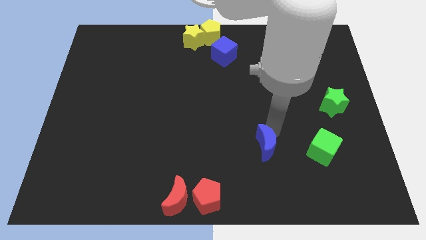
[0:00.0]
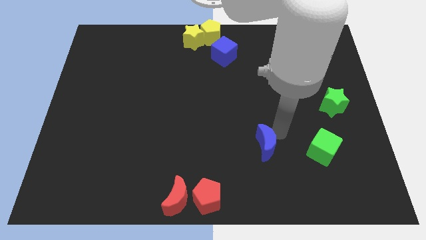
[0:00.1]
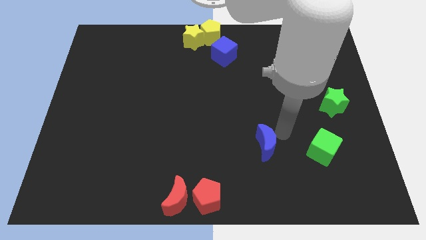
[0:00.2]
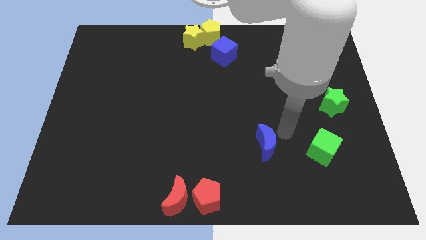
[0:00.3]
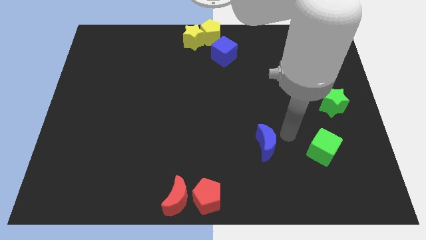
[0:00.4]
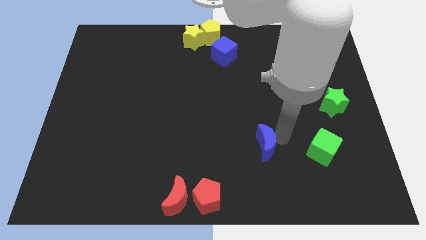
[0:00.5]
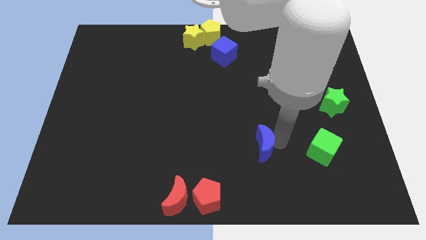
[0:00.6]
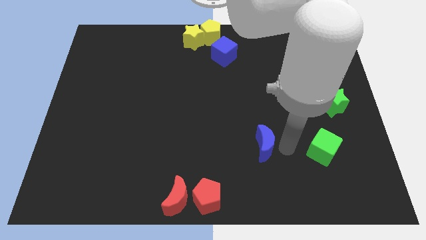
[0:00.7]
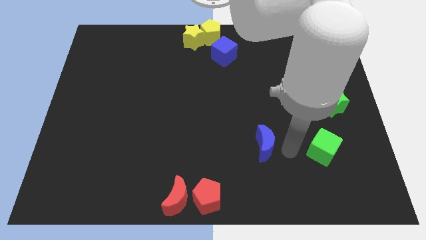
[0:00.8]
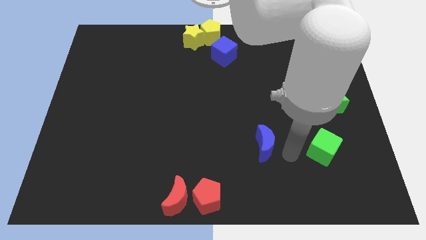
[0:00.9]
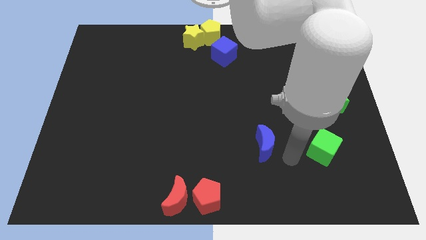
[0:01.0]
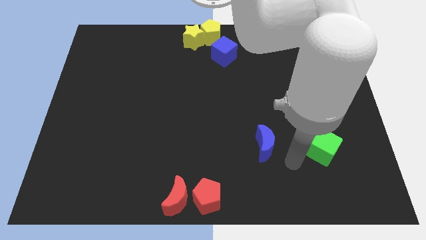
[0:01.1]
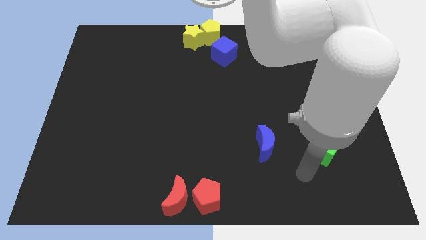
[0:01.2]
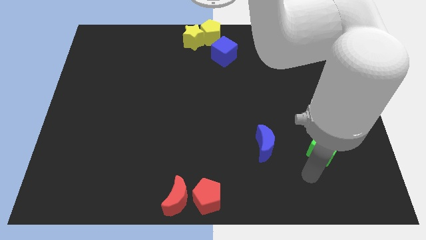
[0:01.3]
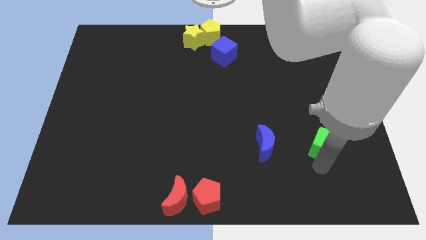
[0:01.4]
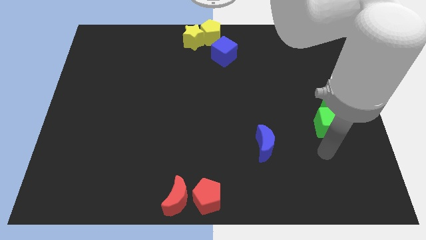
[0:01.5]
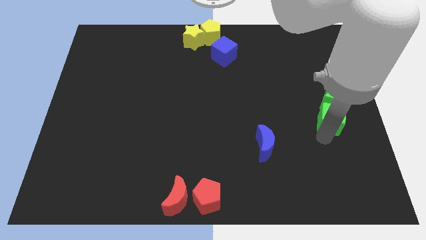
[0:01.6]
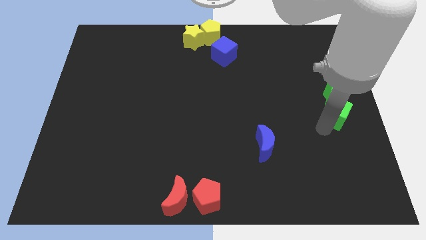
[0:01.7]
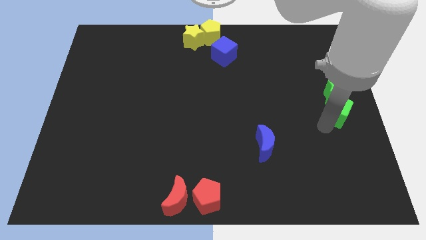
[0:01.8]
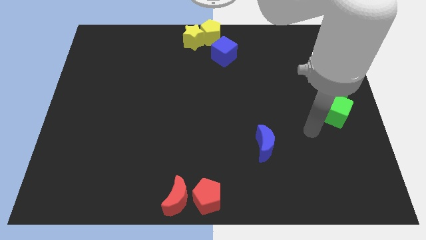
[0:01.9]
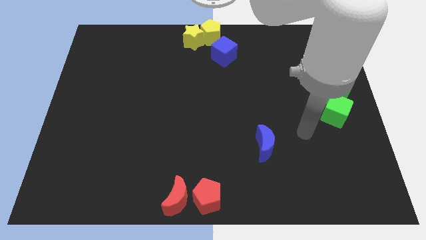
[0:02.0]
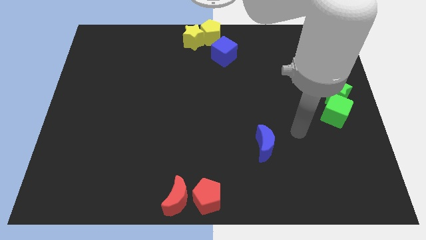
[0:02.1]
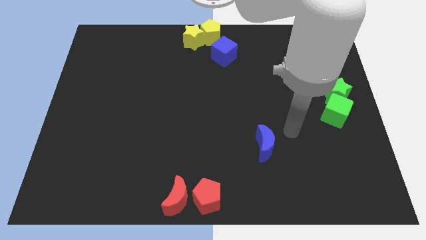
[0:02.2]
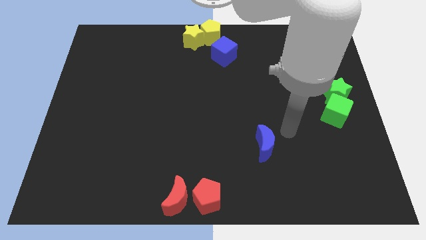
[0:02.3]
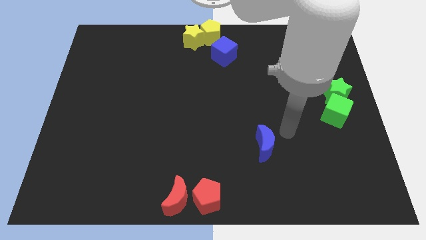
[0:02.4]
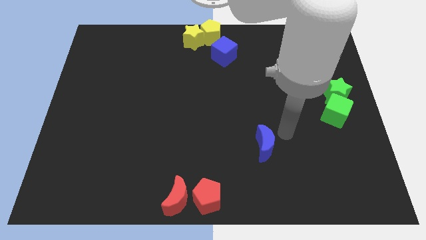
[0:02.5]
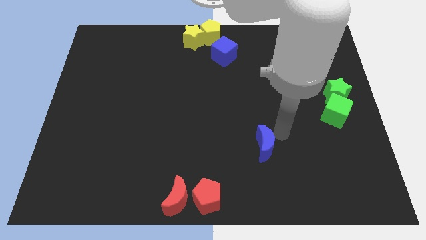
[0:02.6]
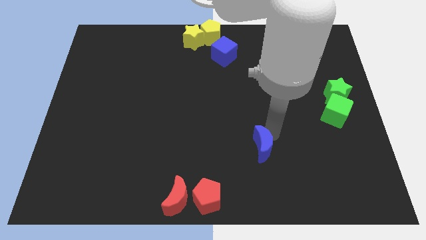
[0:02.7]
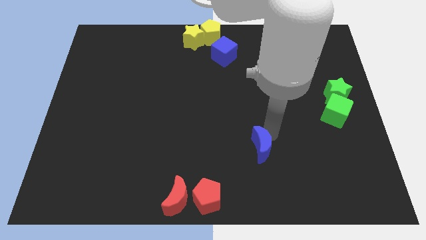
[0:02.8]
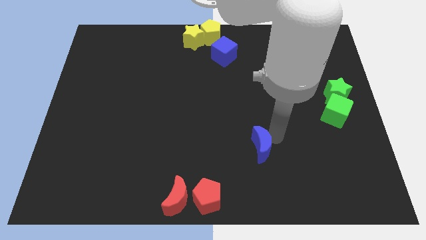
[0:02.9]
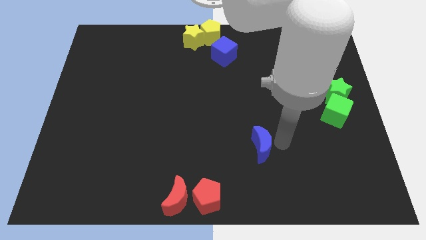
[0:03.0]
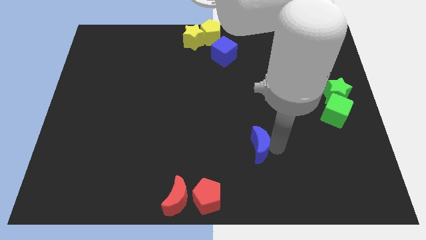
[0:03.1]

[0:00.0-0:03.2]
push the green cube into the green star

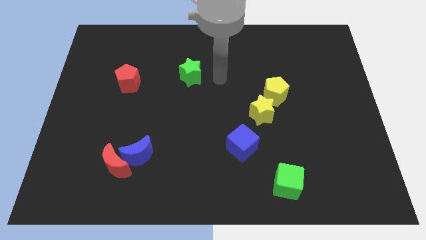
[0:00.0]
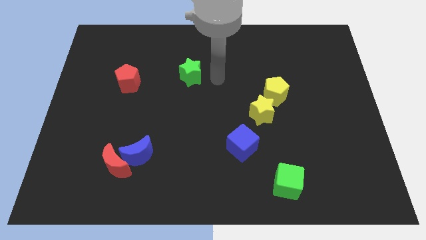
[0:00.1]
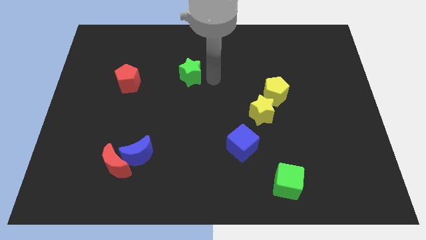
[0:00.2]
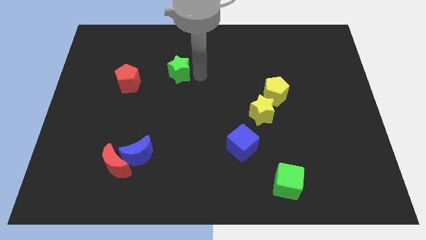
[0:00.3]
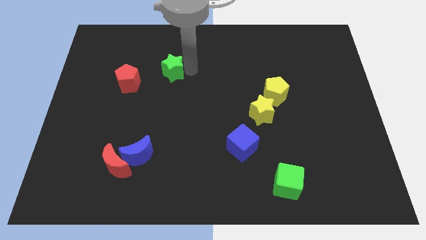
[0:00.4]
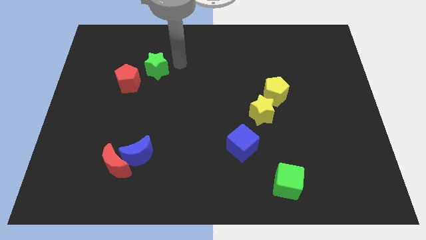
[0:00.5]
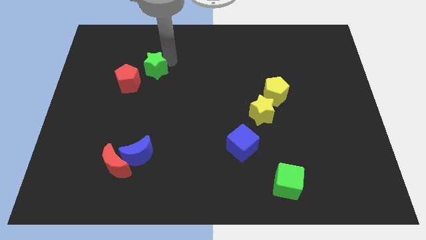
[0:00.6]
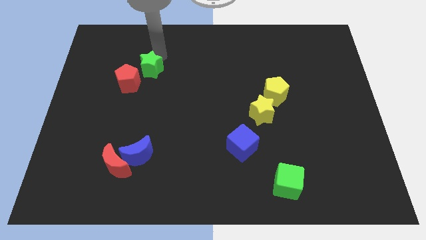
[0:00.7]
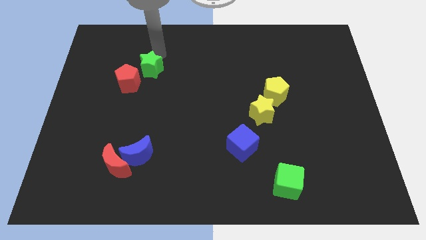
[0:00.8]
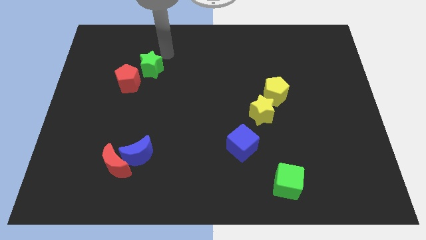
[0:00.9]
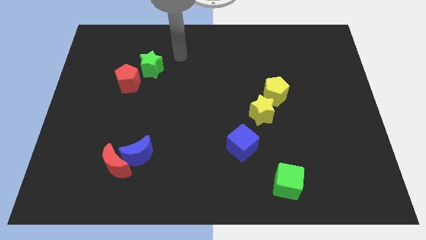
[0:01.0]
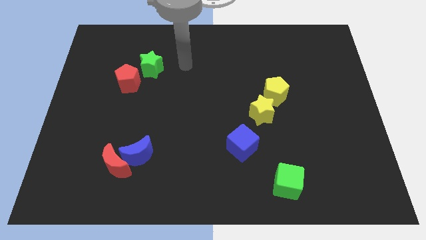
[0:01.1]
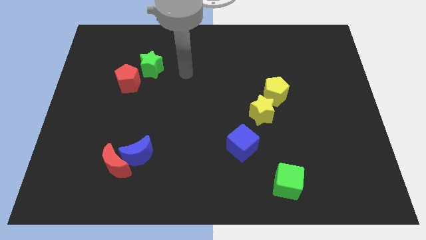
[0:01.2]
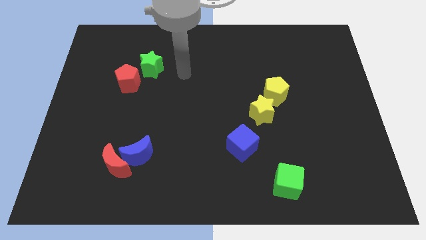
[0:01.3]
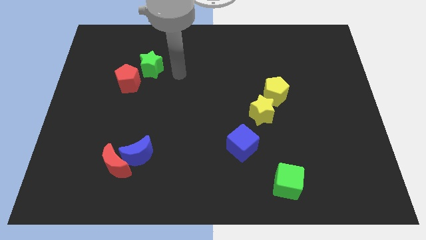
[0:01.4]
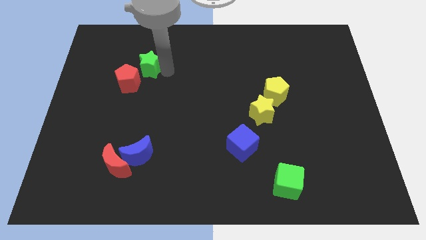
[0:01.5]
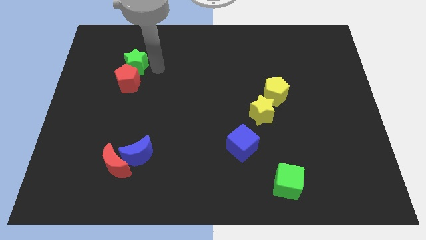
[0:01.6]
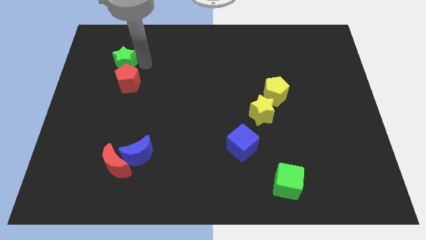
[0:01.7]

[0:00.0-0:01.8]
place the green star above the red pentagon

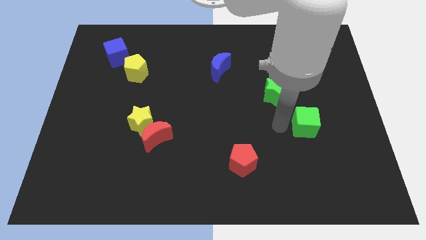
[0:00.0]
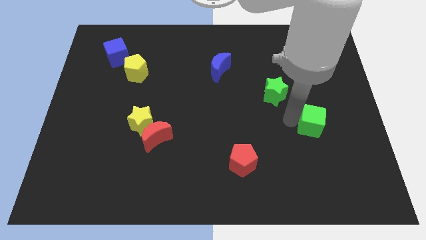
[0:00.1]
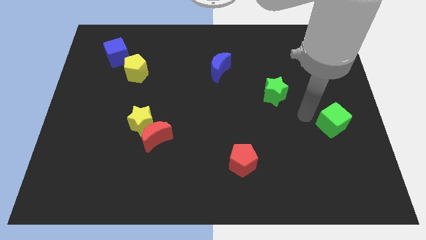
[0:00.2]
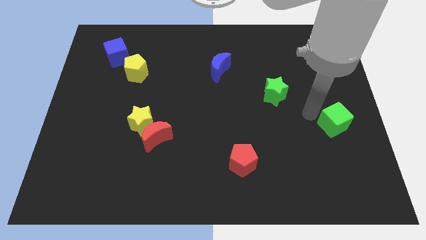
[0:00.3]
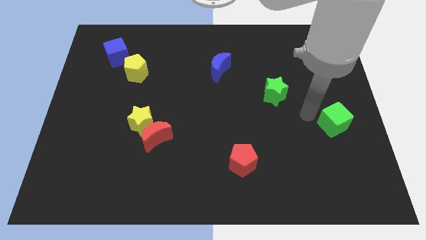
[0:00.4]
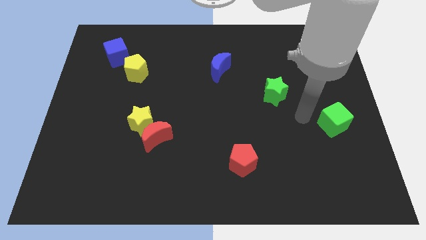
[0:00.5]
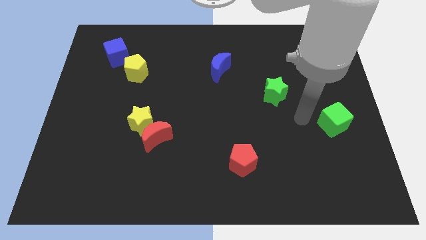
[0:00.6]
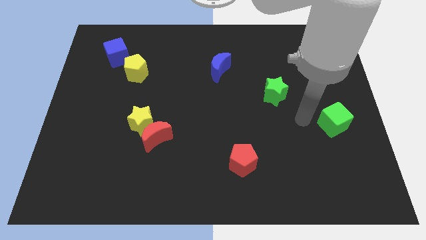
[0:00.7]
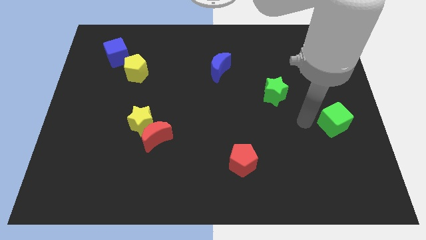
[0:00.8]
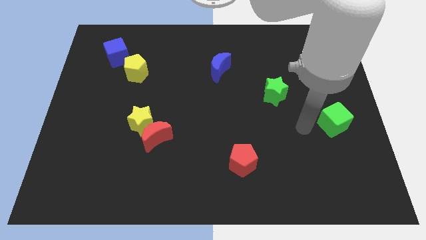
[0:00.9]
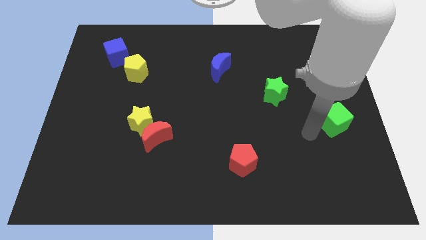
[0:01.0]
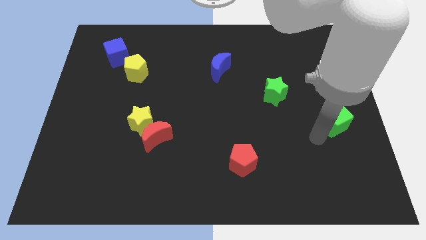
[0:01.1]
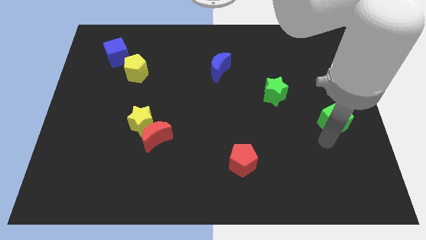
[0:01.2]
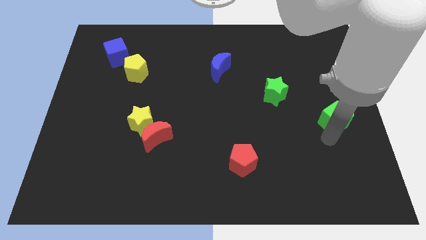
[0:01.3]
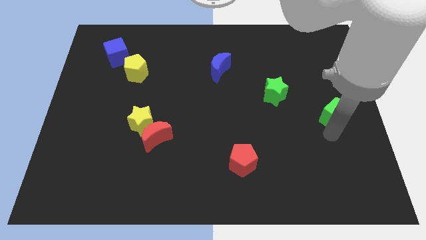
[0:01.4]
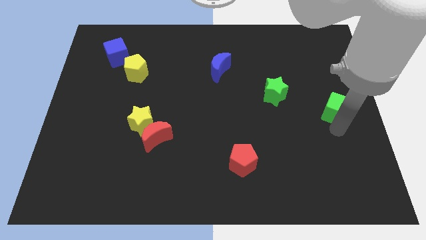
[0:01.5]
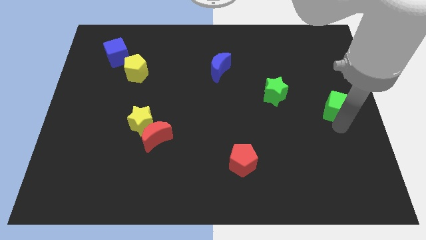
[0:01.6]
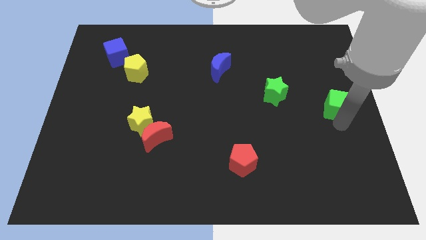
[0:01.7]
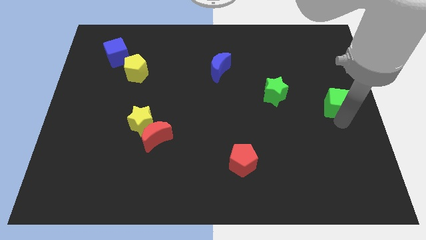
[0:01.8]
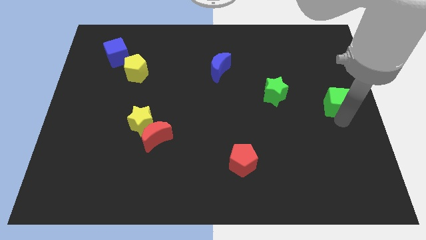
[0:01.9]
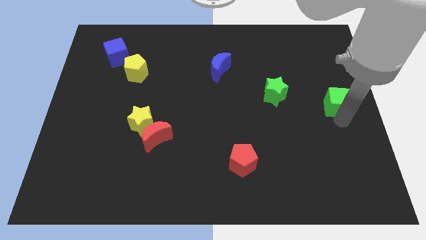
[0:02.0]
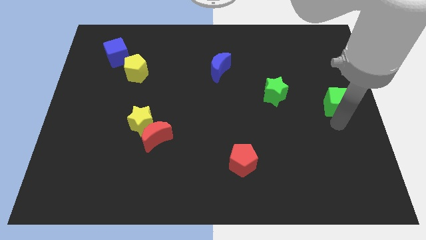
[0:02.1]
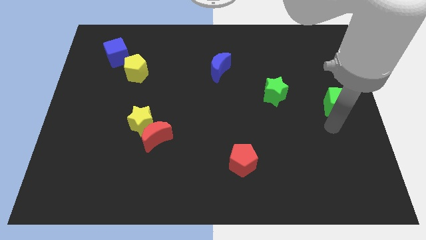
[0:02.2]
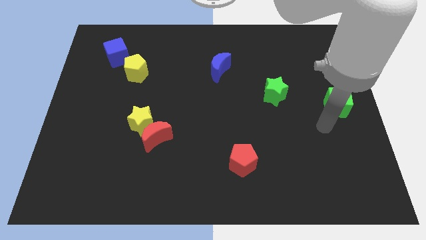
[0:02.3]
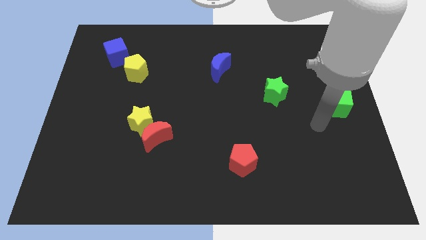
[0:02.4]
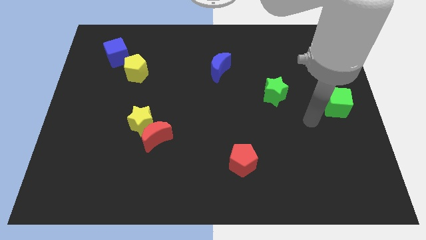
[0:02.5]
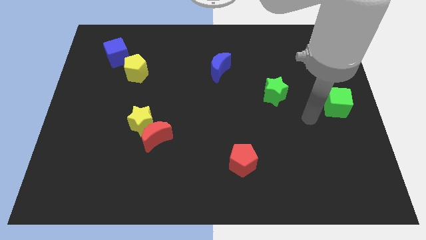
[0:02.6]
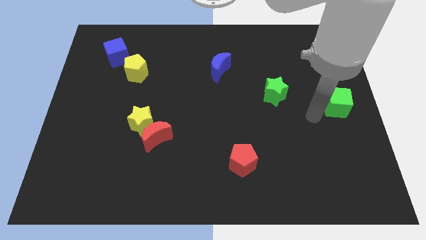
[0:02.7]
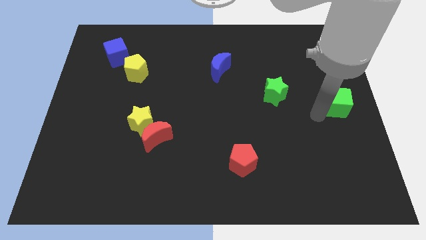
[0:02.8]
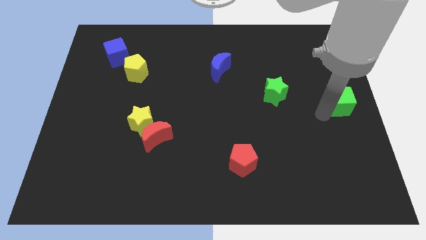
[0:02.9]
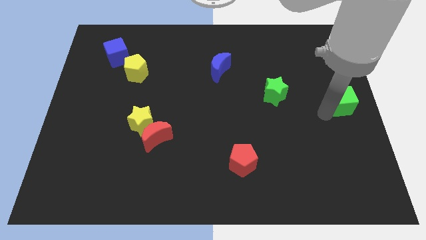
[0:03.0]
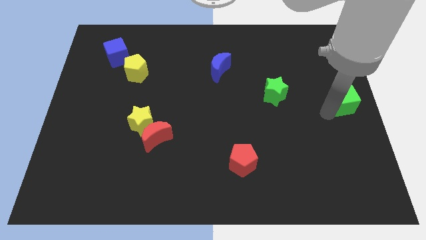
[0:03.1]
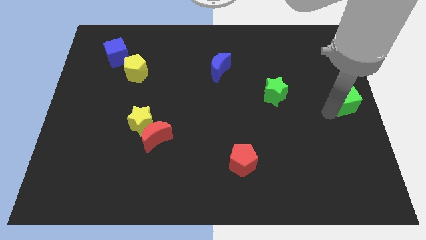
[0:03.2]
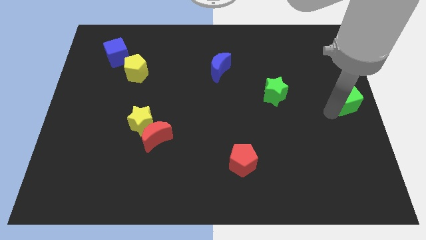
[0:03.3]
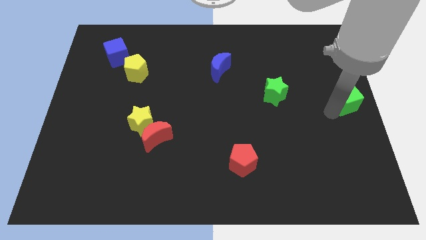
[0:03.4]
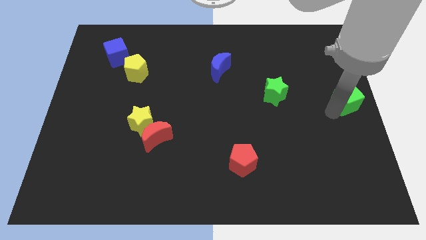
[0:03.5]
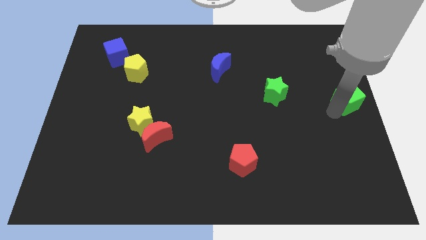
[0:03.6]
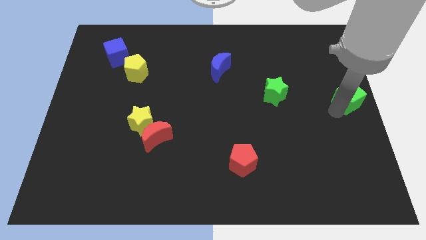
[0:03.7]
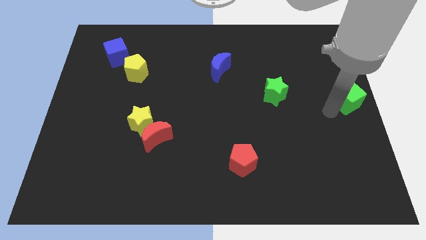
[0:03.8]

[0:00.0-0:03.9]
push the green cube to the right center of the board
